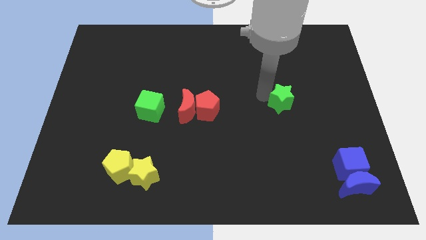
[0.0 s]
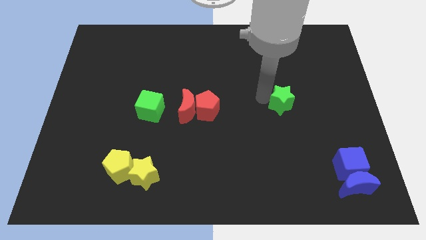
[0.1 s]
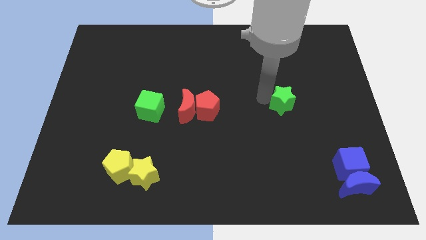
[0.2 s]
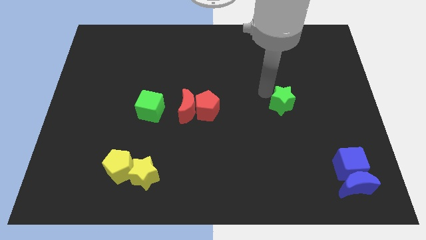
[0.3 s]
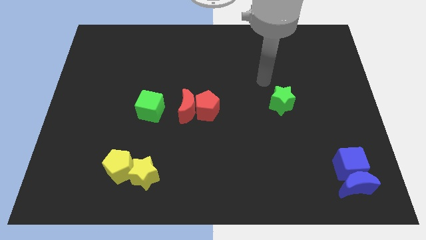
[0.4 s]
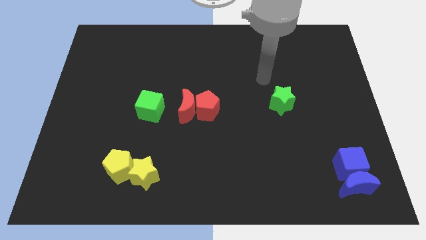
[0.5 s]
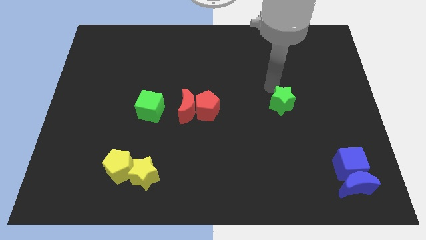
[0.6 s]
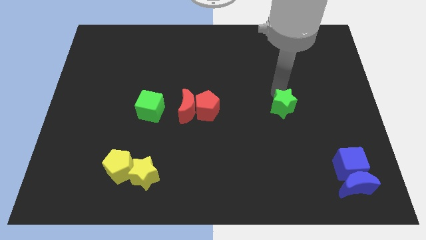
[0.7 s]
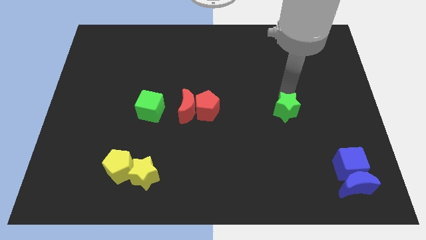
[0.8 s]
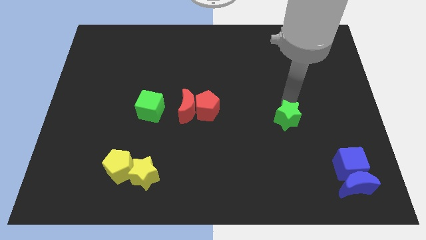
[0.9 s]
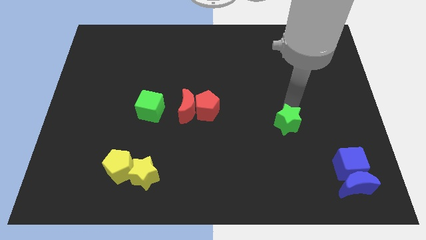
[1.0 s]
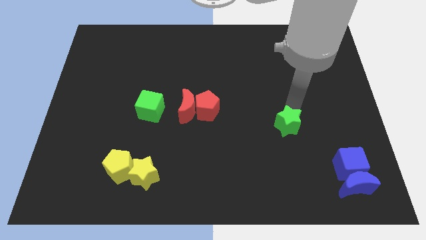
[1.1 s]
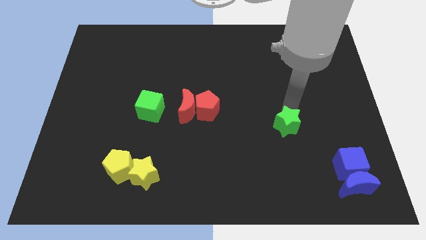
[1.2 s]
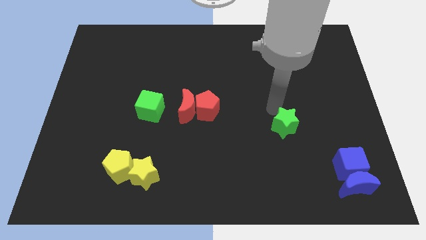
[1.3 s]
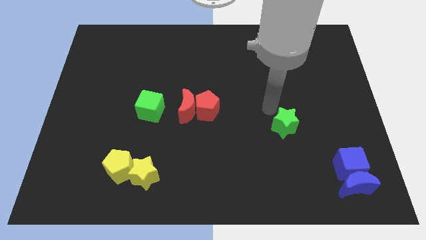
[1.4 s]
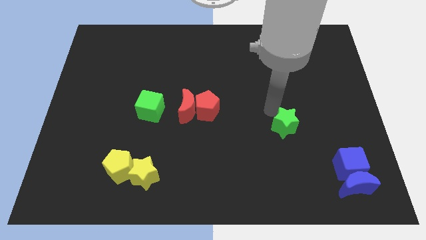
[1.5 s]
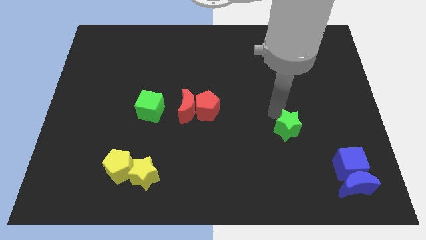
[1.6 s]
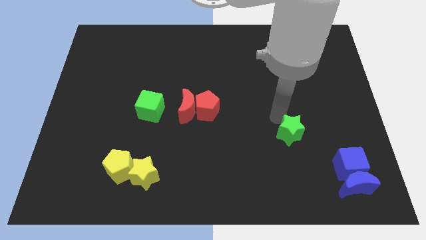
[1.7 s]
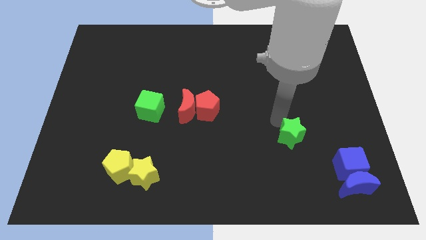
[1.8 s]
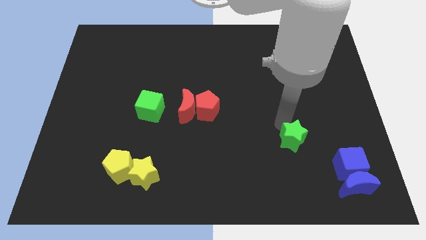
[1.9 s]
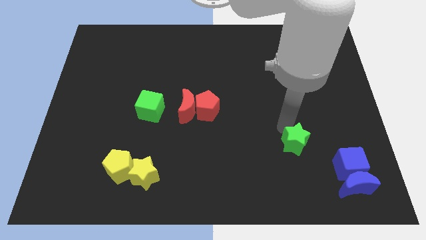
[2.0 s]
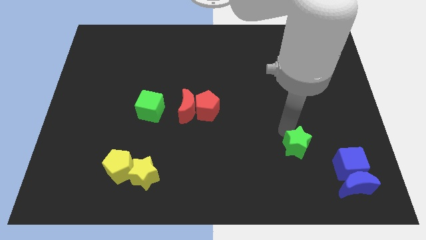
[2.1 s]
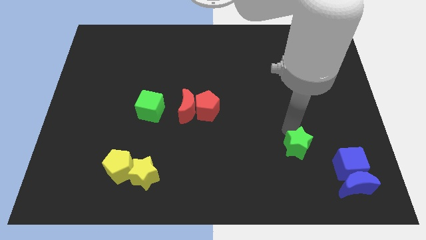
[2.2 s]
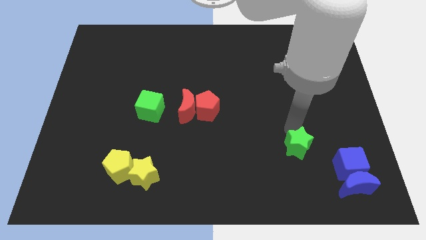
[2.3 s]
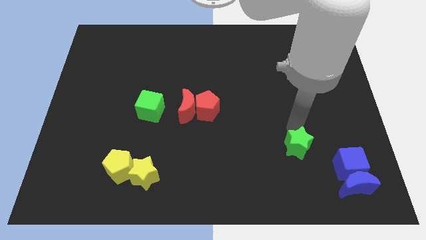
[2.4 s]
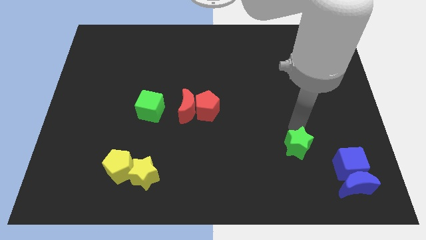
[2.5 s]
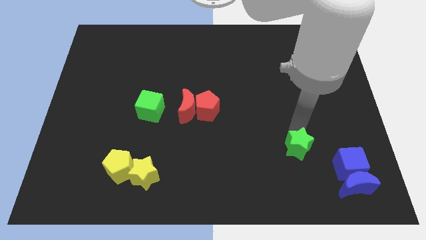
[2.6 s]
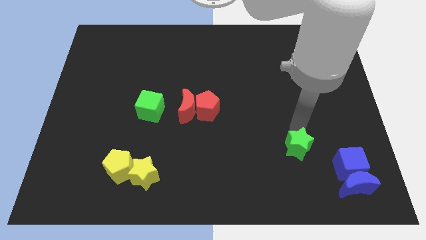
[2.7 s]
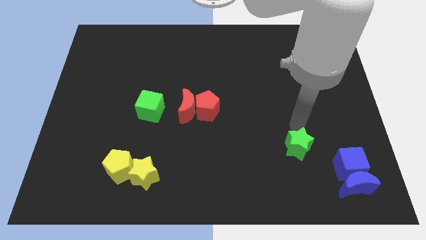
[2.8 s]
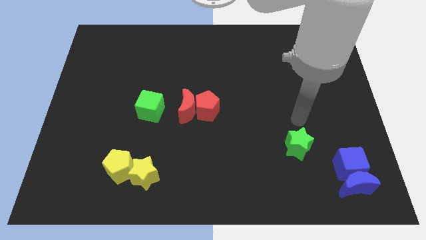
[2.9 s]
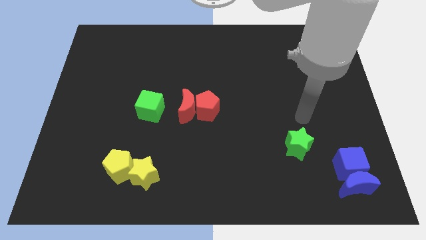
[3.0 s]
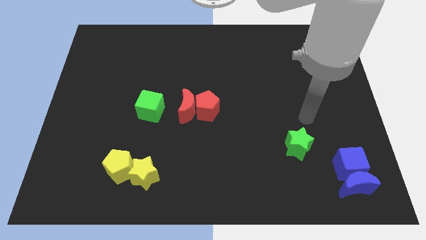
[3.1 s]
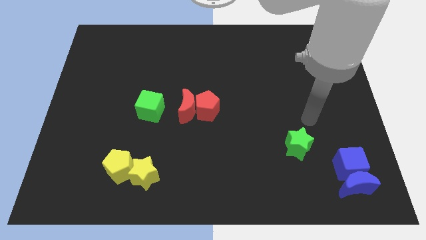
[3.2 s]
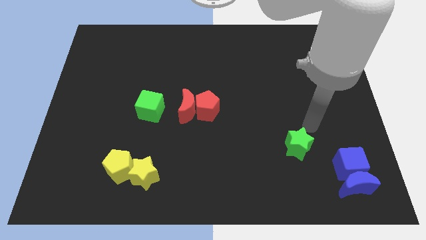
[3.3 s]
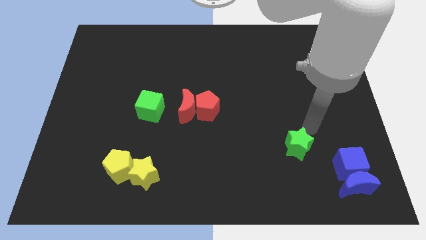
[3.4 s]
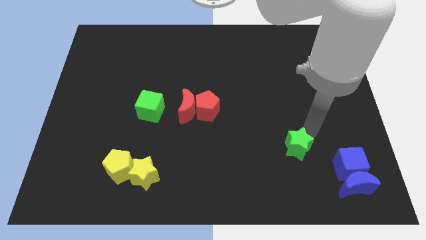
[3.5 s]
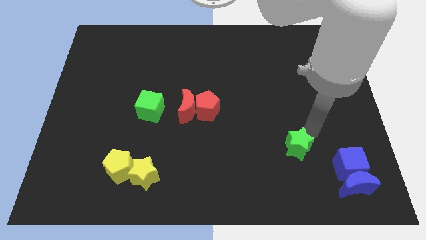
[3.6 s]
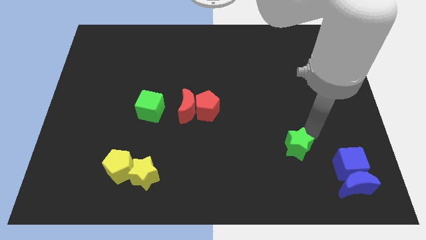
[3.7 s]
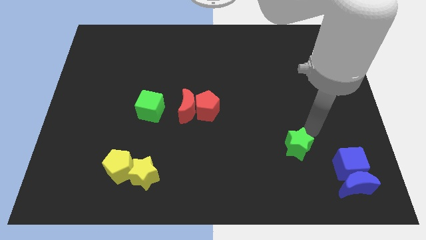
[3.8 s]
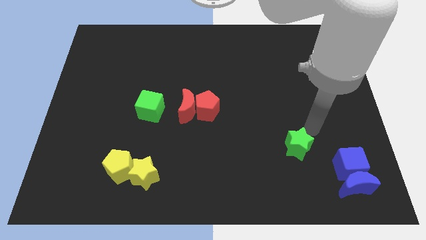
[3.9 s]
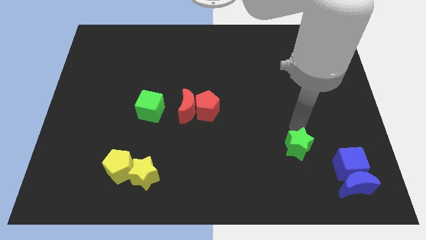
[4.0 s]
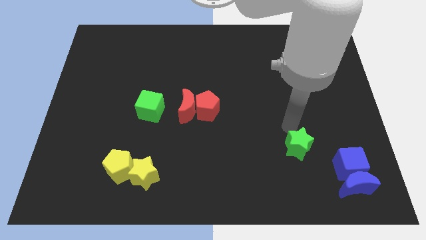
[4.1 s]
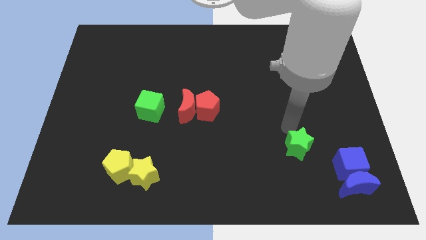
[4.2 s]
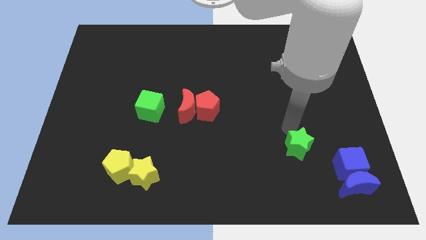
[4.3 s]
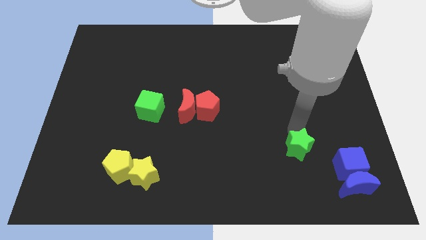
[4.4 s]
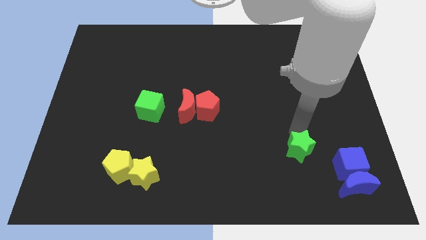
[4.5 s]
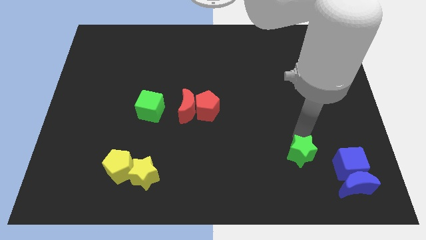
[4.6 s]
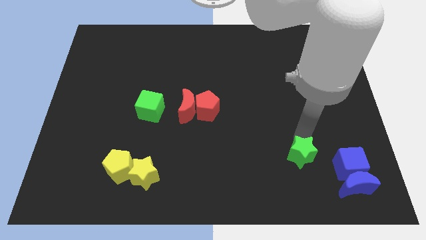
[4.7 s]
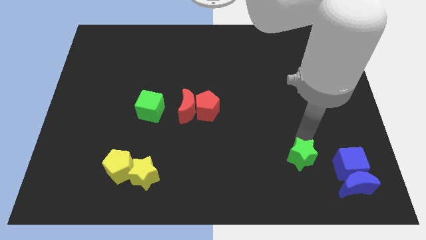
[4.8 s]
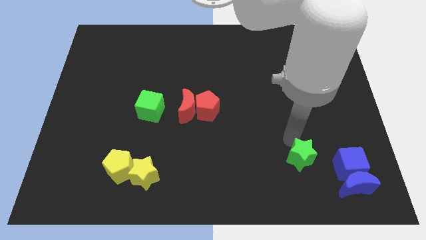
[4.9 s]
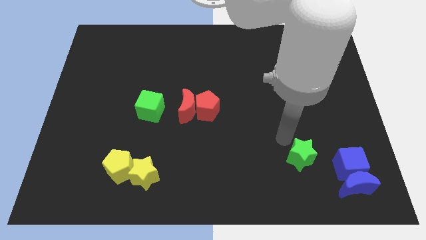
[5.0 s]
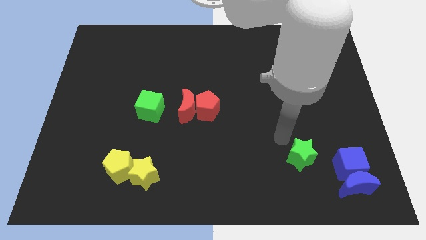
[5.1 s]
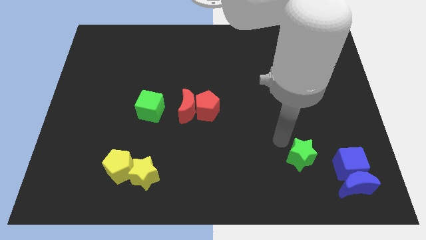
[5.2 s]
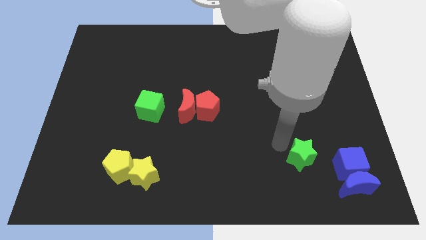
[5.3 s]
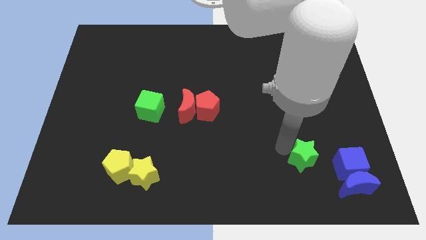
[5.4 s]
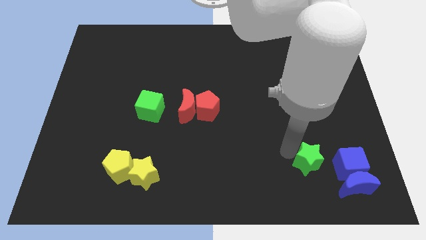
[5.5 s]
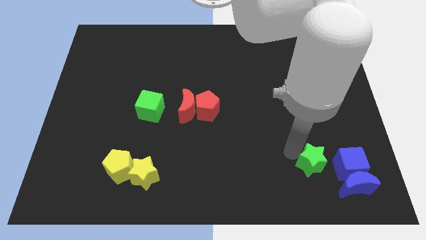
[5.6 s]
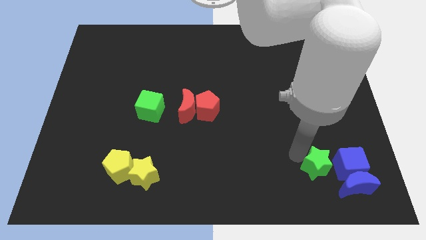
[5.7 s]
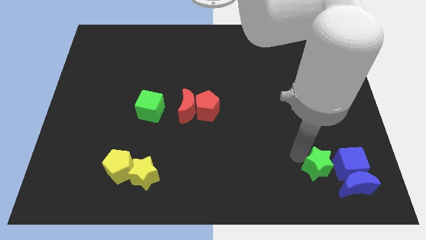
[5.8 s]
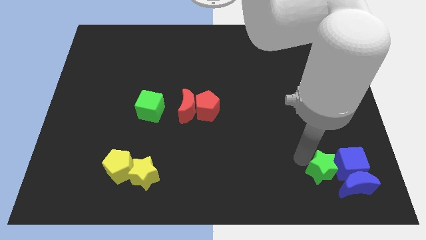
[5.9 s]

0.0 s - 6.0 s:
place the green star to the left side of the blue cube

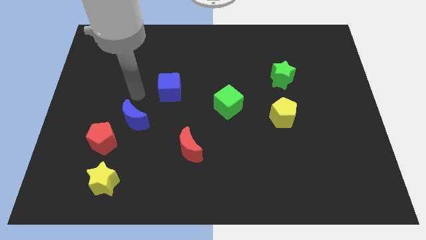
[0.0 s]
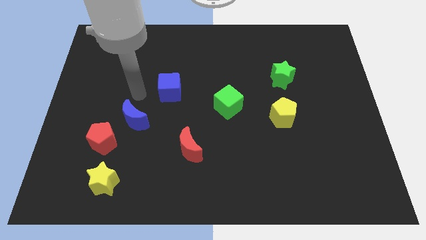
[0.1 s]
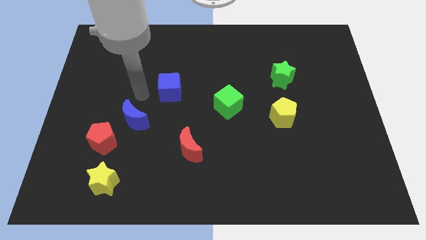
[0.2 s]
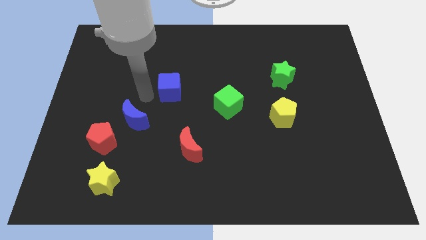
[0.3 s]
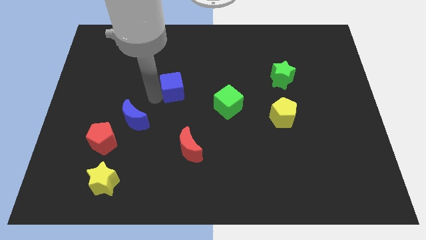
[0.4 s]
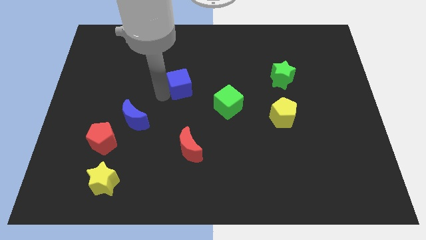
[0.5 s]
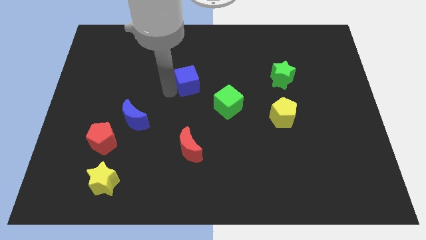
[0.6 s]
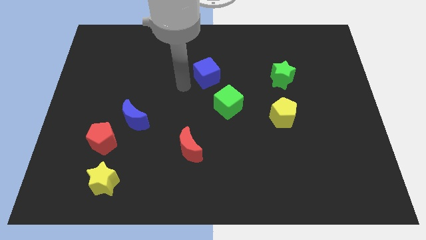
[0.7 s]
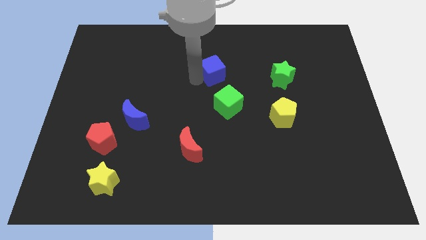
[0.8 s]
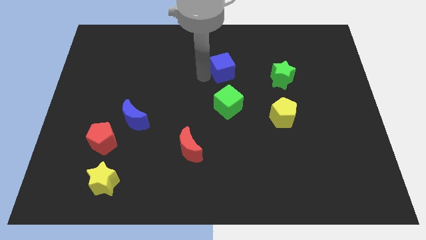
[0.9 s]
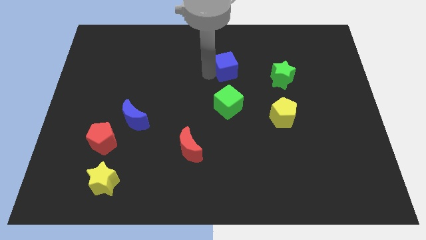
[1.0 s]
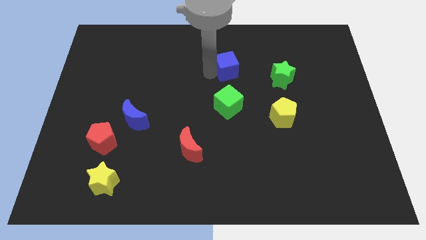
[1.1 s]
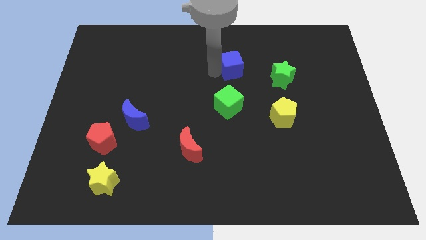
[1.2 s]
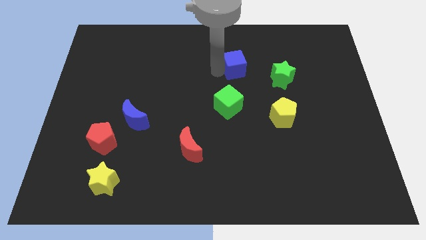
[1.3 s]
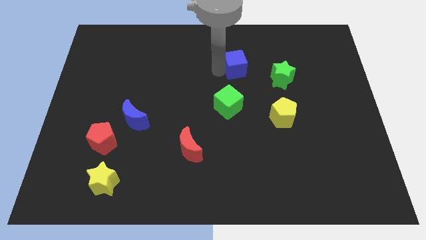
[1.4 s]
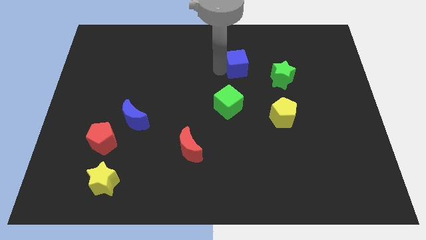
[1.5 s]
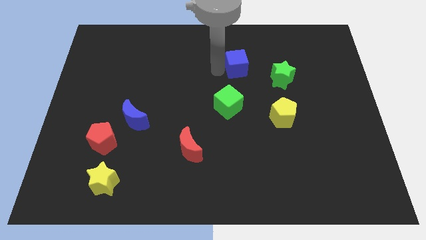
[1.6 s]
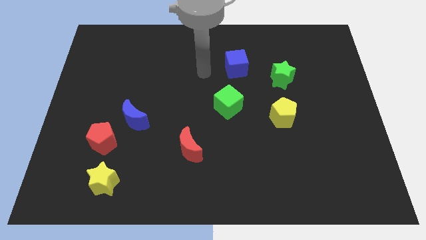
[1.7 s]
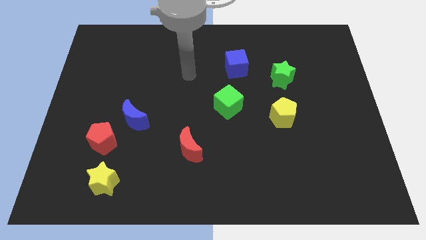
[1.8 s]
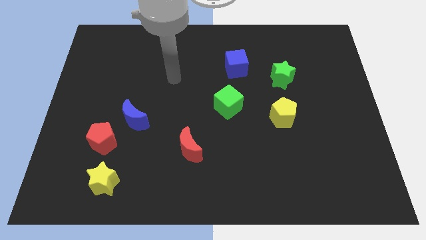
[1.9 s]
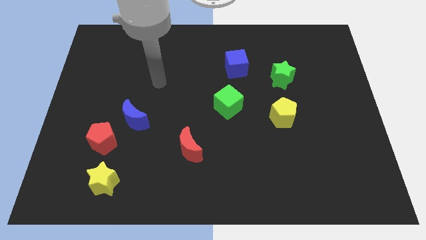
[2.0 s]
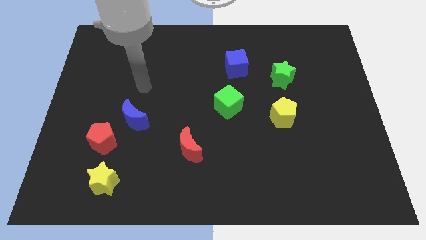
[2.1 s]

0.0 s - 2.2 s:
move the blue cube to the left side of the green star

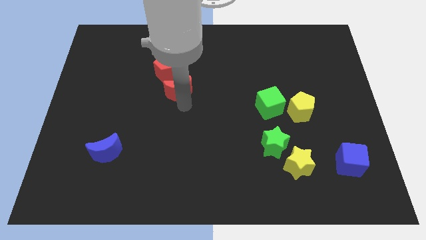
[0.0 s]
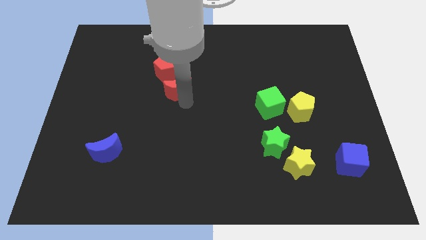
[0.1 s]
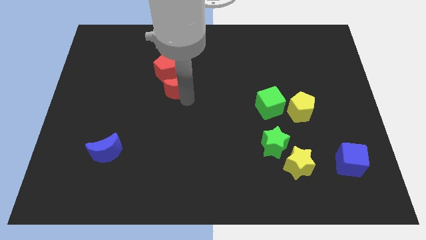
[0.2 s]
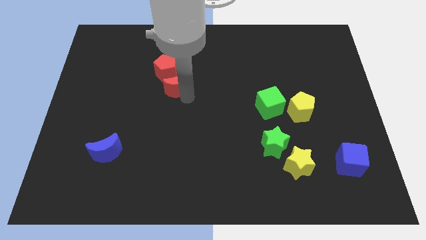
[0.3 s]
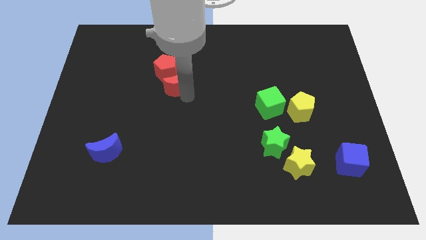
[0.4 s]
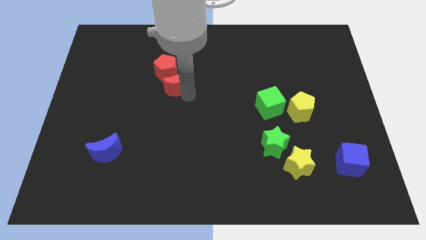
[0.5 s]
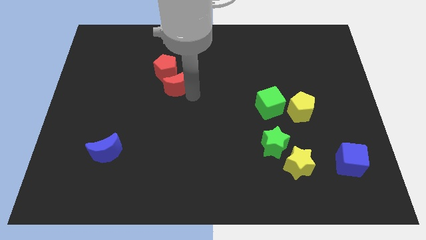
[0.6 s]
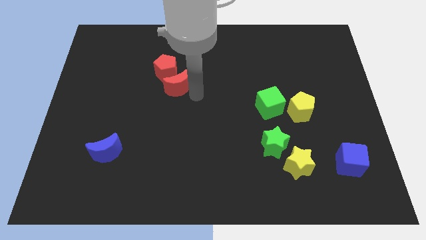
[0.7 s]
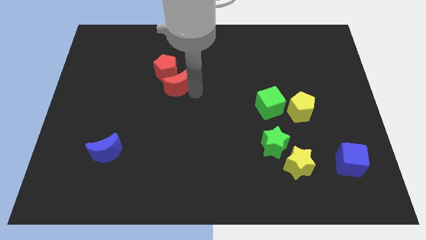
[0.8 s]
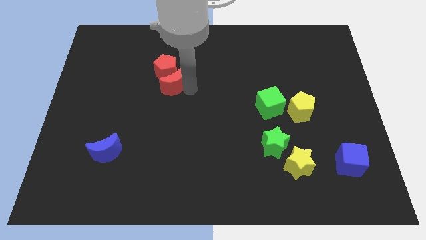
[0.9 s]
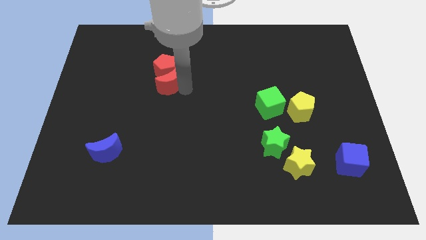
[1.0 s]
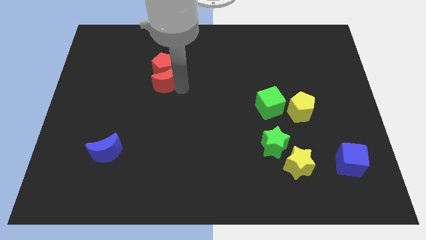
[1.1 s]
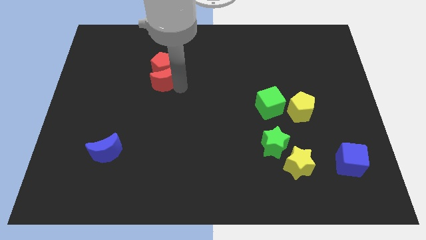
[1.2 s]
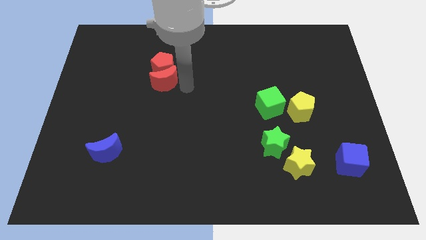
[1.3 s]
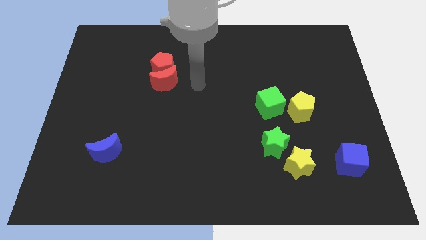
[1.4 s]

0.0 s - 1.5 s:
push the red crescent to the bottom of the red pentagon
